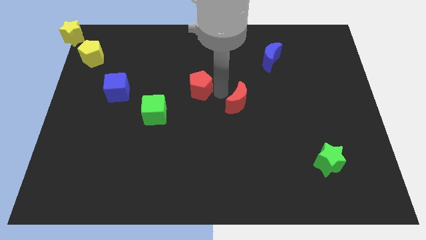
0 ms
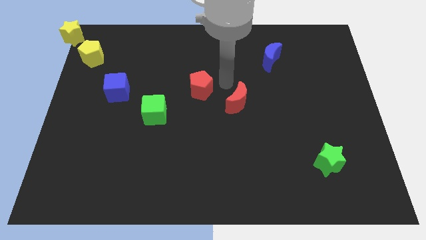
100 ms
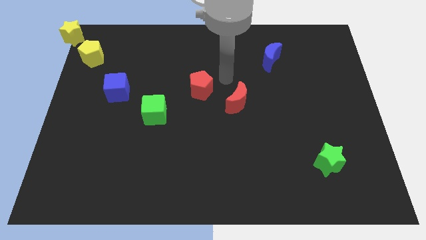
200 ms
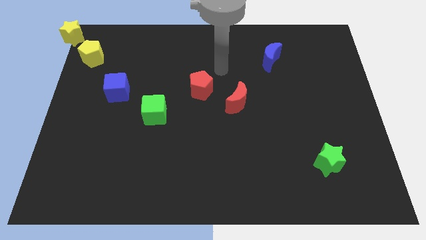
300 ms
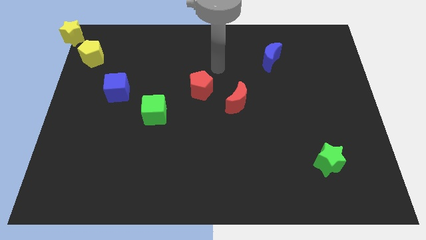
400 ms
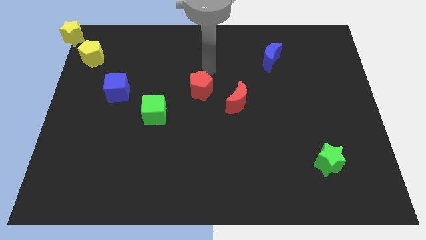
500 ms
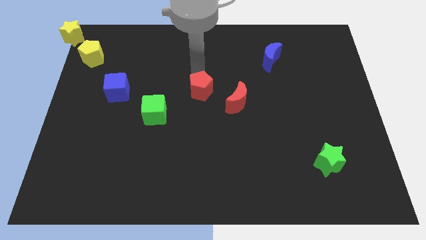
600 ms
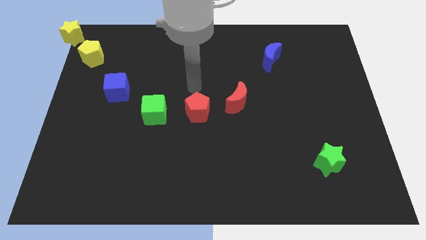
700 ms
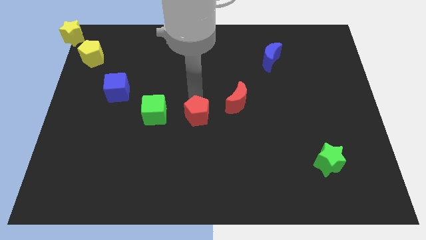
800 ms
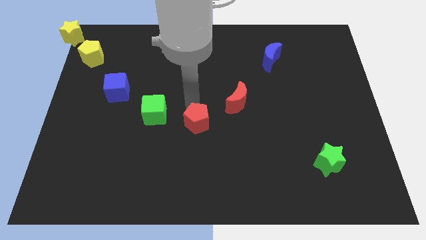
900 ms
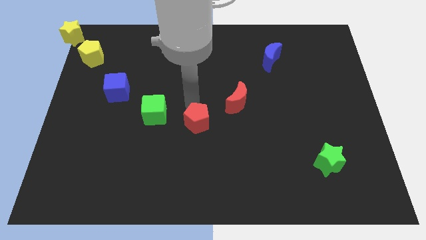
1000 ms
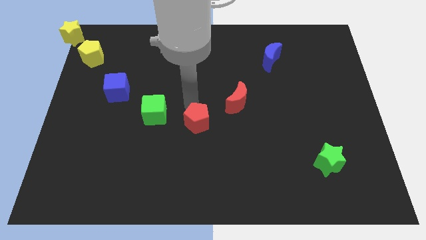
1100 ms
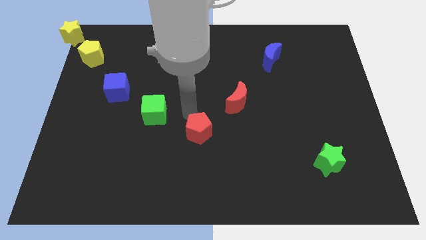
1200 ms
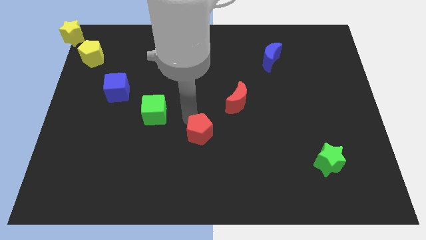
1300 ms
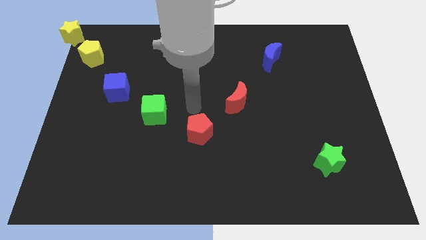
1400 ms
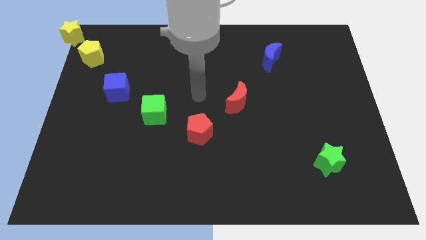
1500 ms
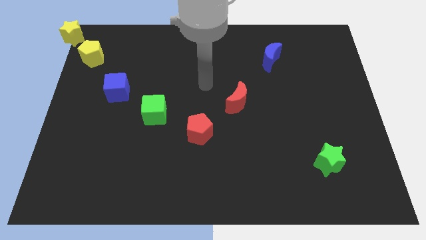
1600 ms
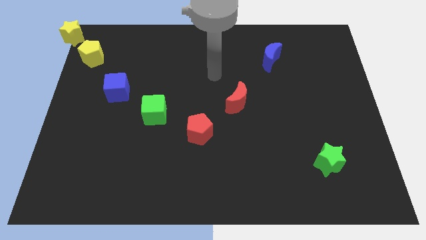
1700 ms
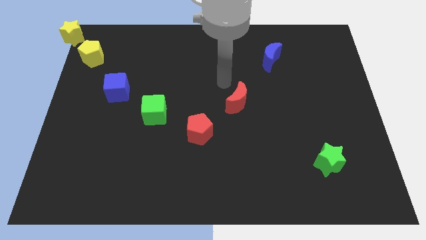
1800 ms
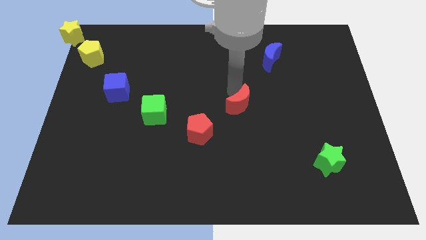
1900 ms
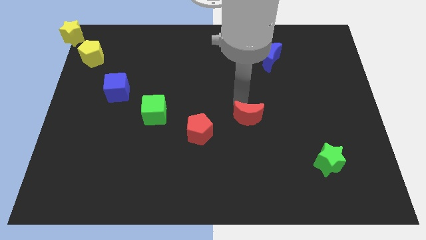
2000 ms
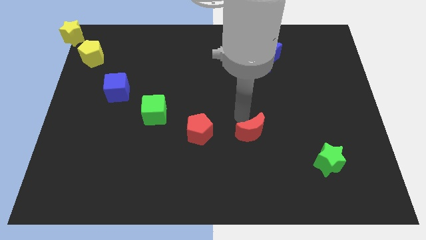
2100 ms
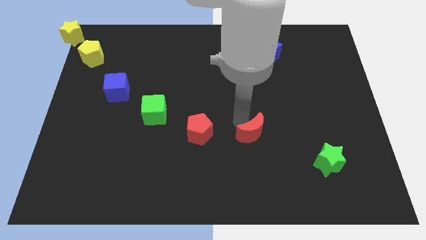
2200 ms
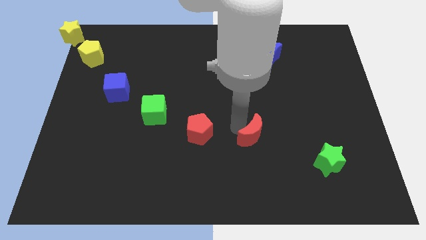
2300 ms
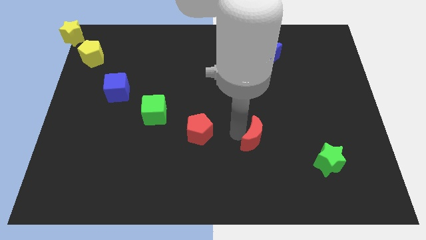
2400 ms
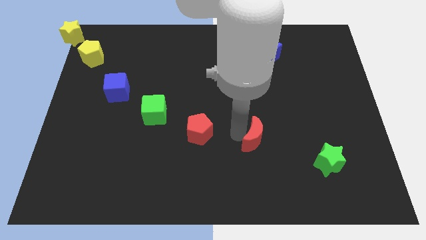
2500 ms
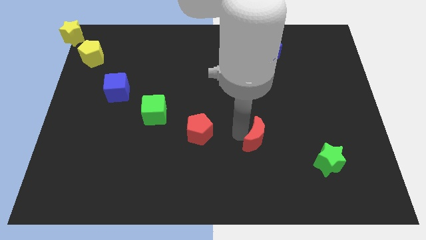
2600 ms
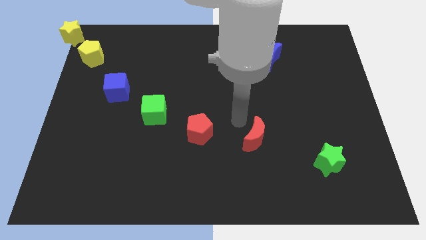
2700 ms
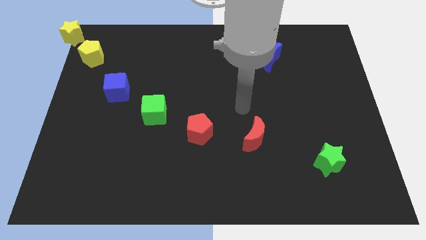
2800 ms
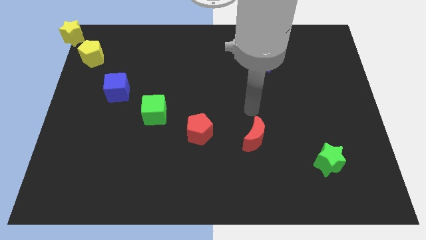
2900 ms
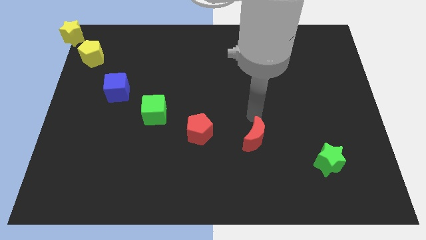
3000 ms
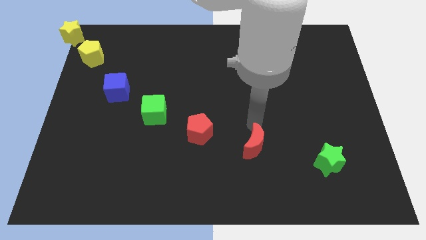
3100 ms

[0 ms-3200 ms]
put the red pentagon and red moon in a line horizontally

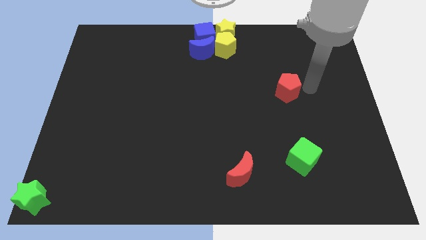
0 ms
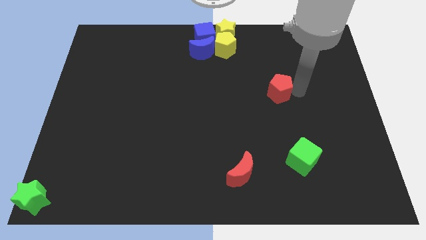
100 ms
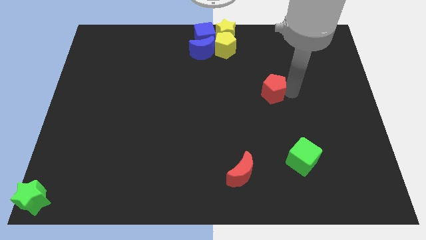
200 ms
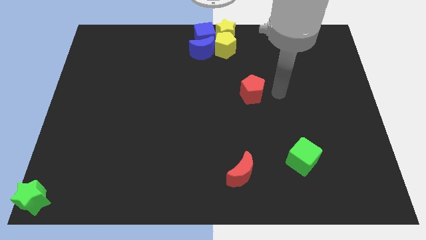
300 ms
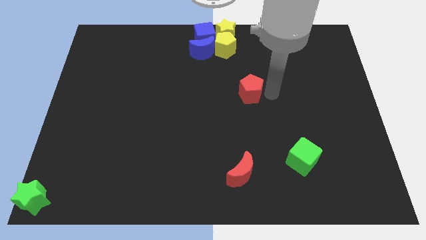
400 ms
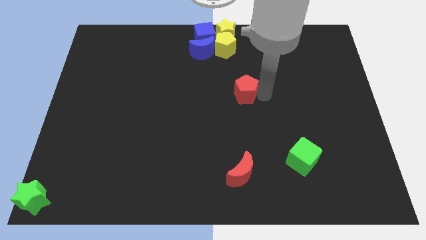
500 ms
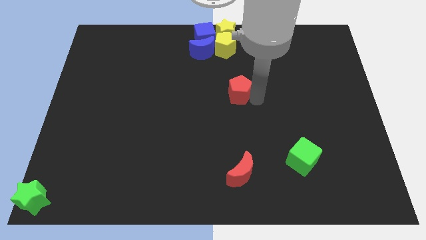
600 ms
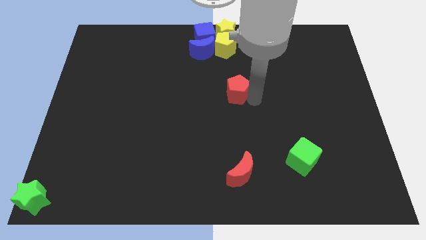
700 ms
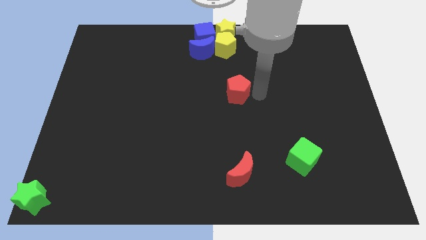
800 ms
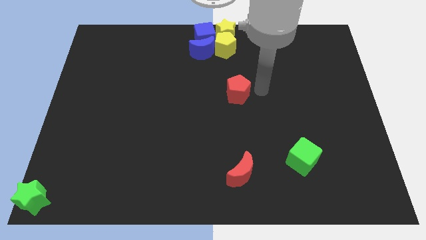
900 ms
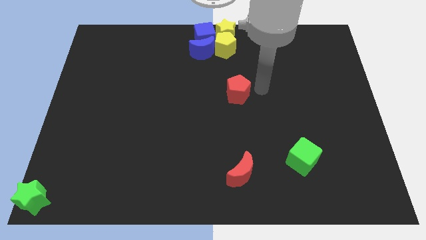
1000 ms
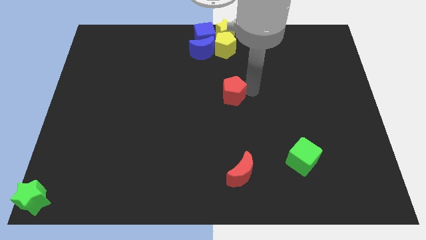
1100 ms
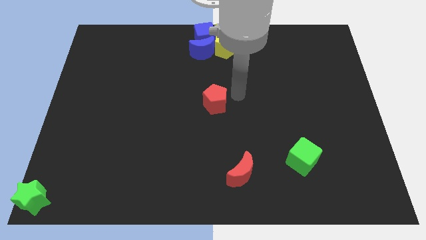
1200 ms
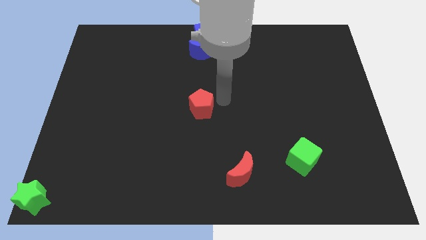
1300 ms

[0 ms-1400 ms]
place the red pentagon at the center of the board

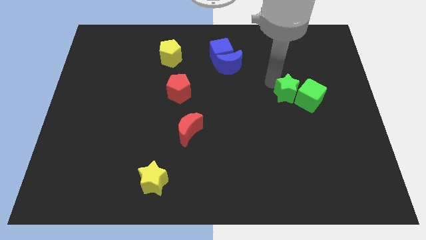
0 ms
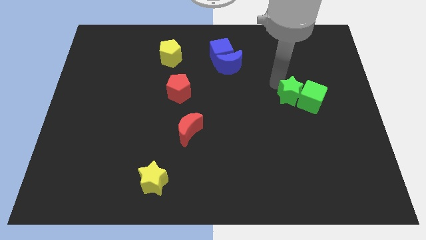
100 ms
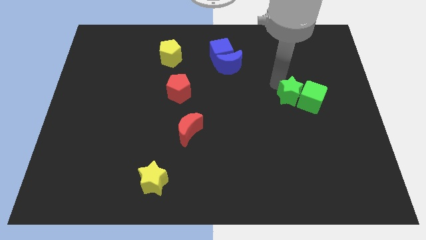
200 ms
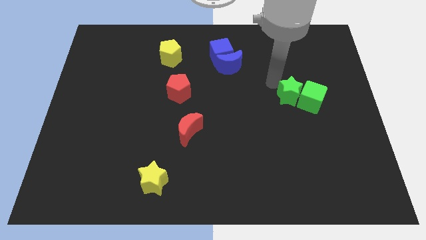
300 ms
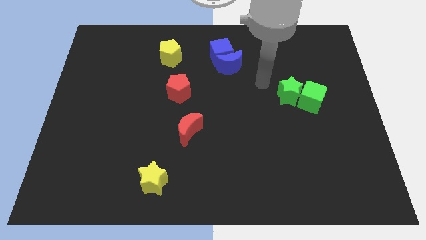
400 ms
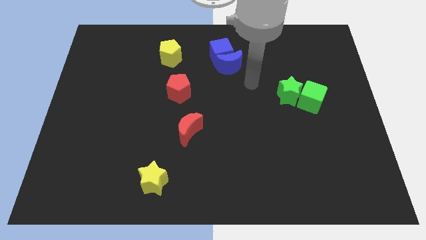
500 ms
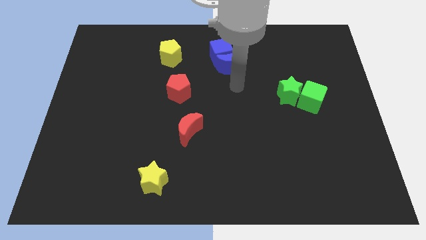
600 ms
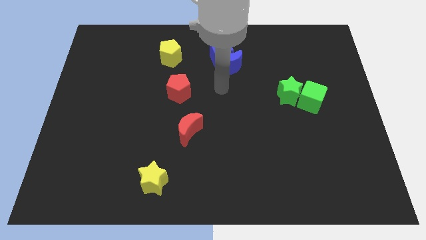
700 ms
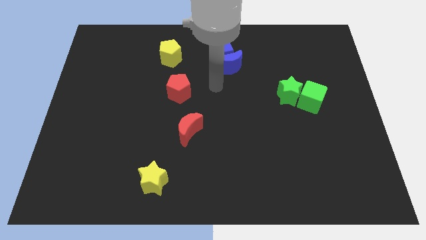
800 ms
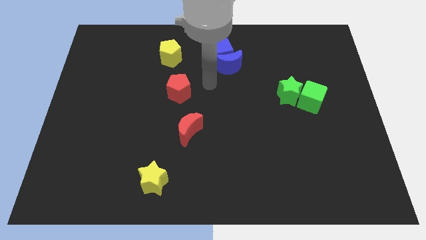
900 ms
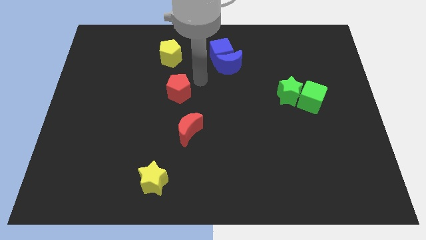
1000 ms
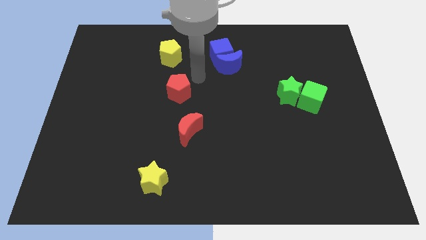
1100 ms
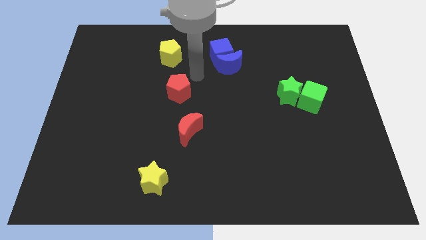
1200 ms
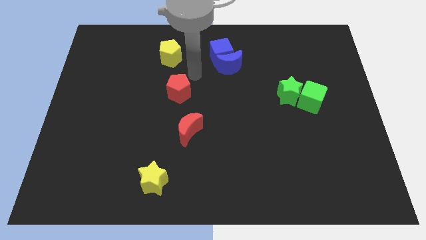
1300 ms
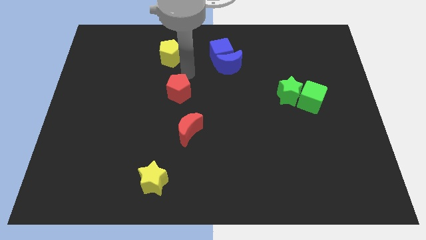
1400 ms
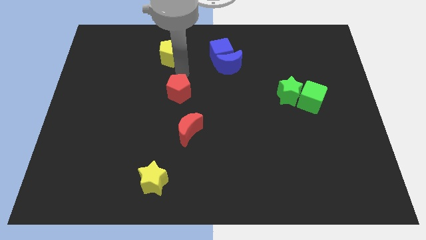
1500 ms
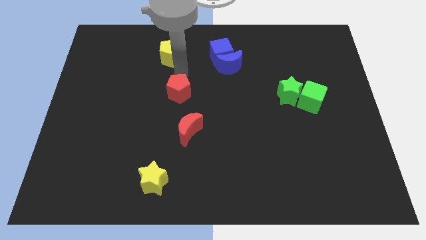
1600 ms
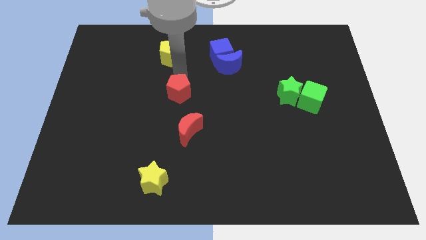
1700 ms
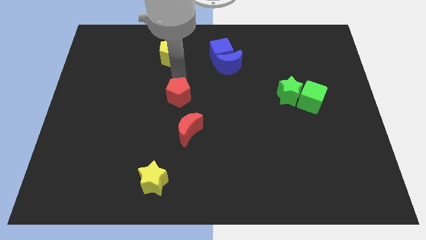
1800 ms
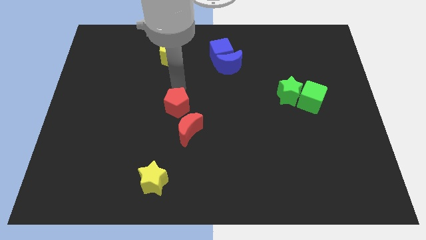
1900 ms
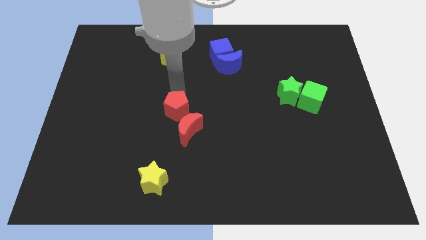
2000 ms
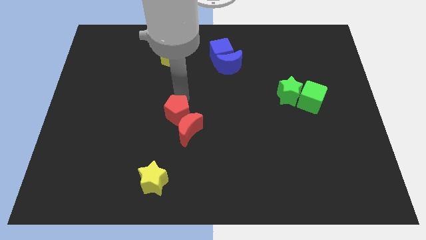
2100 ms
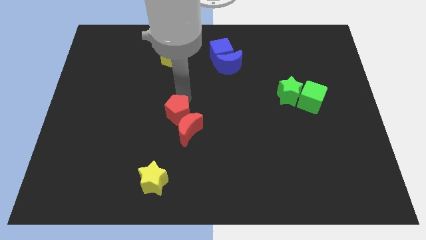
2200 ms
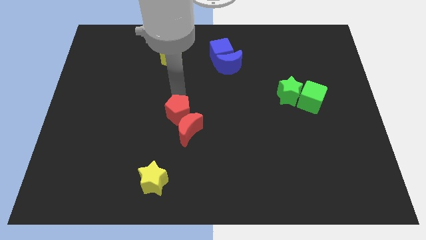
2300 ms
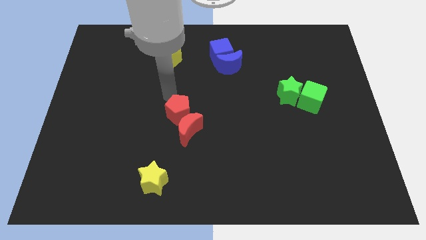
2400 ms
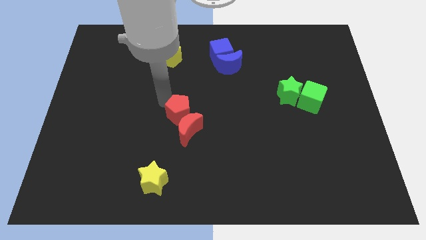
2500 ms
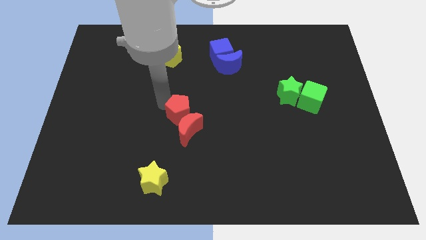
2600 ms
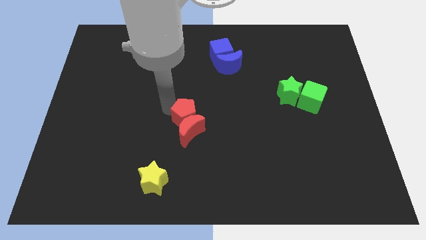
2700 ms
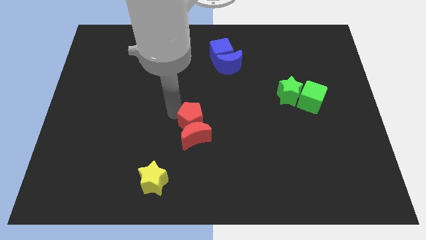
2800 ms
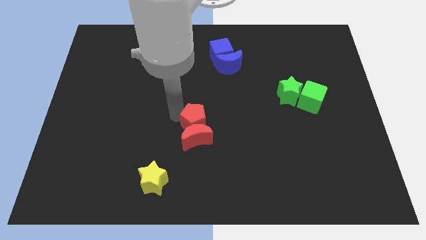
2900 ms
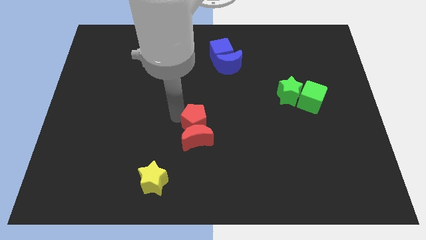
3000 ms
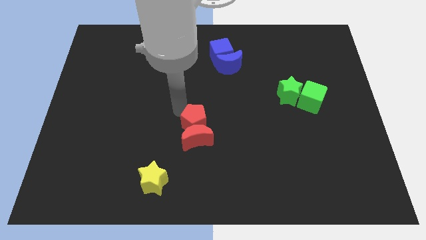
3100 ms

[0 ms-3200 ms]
push the red pentagon into the red crescent

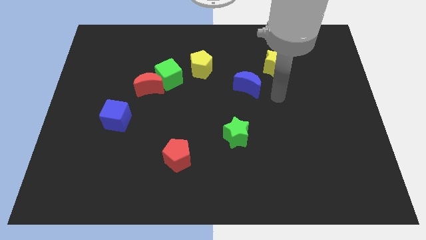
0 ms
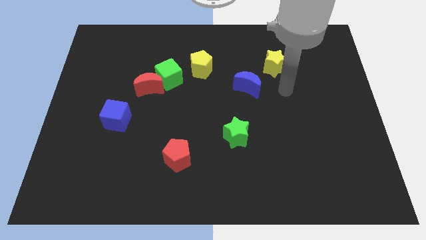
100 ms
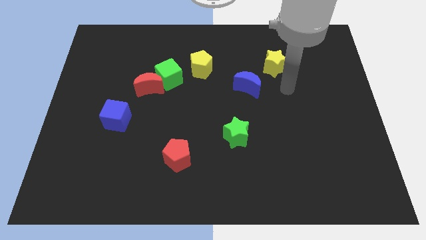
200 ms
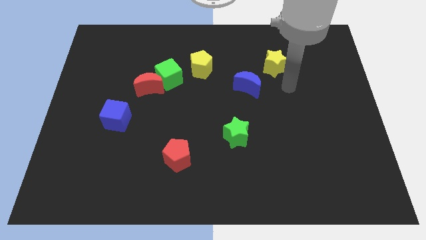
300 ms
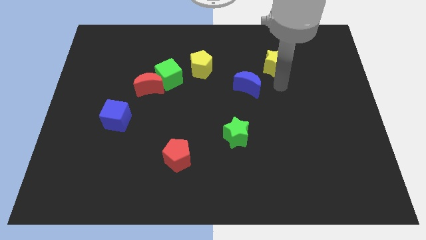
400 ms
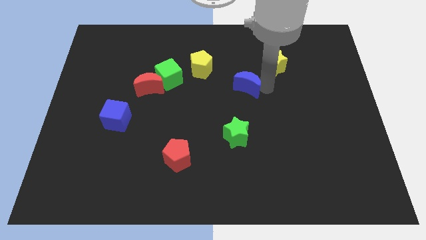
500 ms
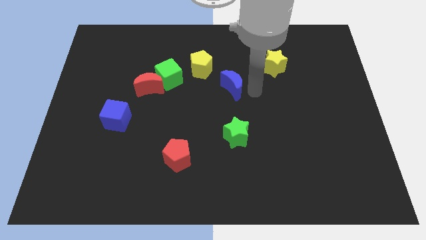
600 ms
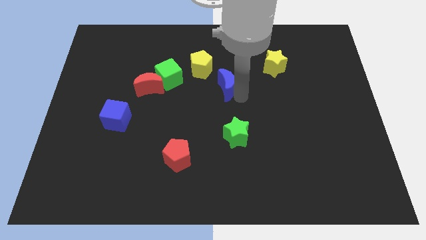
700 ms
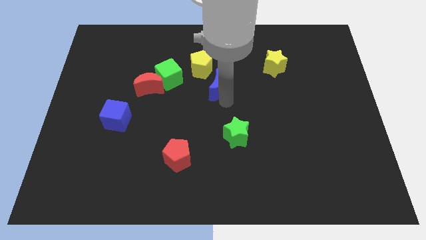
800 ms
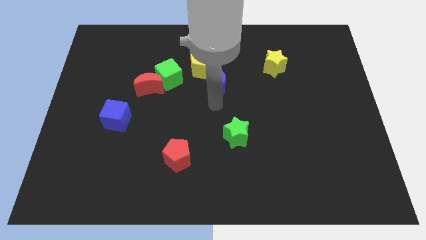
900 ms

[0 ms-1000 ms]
move the blue crescent towards the yellow pentagon

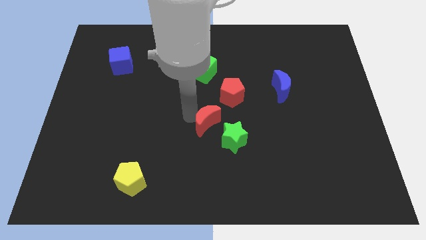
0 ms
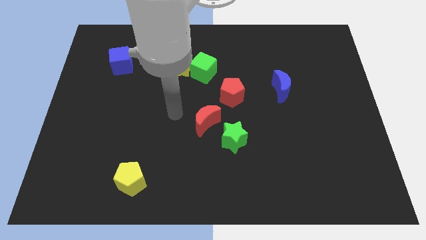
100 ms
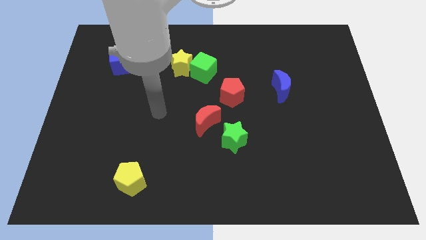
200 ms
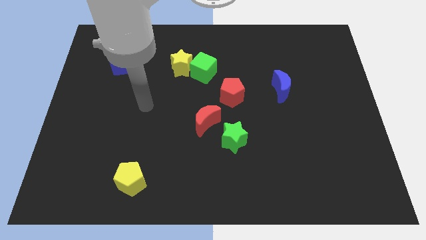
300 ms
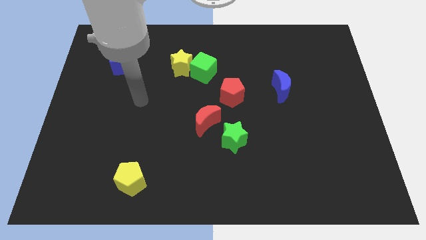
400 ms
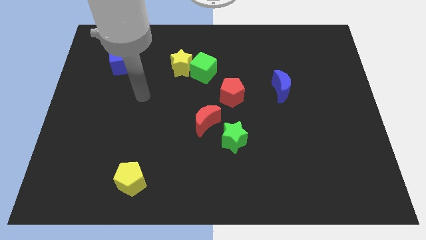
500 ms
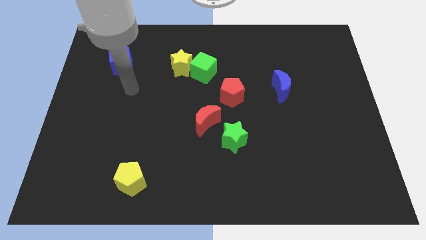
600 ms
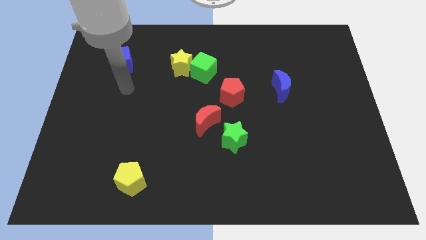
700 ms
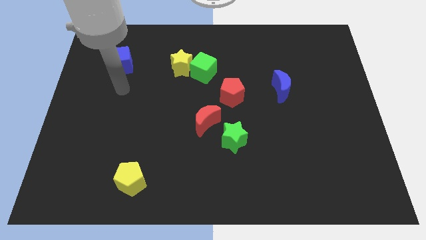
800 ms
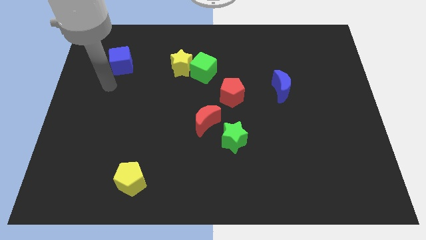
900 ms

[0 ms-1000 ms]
go away from the red moon
